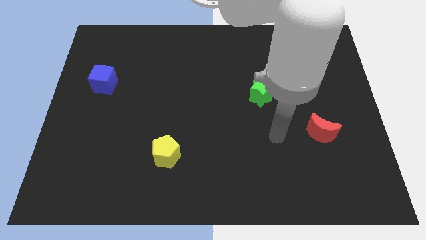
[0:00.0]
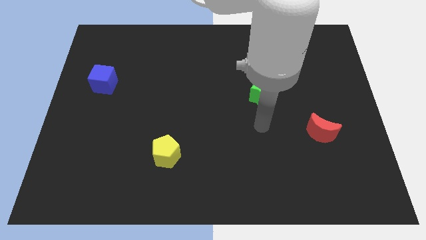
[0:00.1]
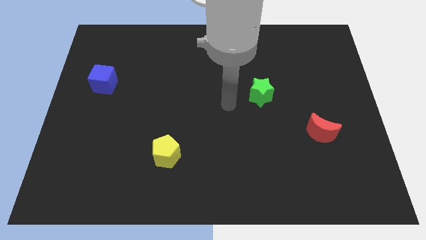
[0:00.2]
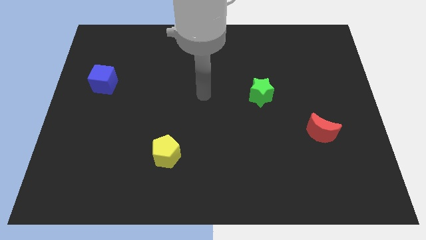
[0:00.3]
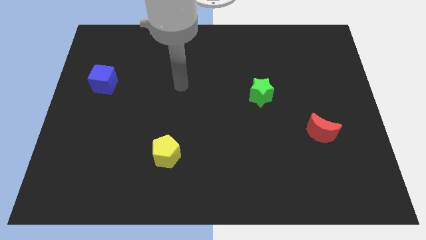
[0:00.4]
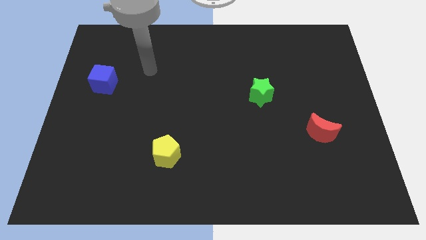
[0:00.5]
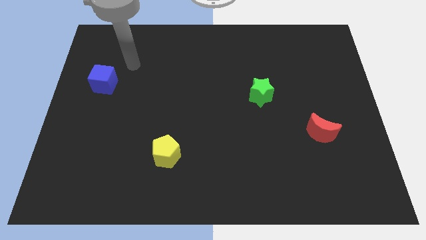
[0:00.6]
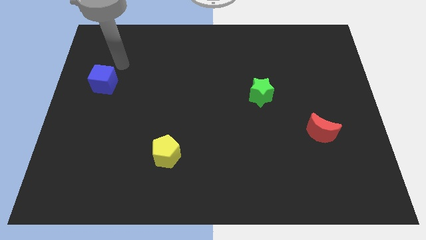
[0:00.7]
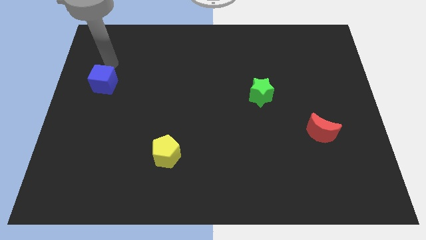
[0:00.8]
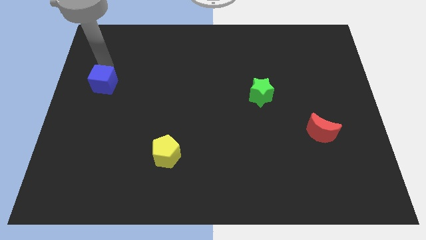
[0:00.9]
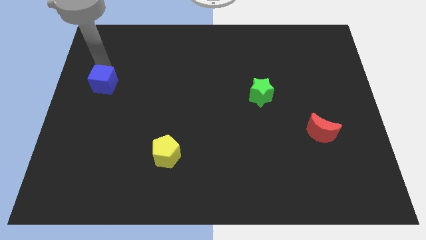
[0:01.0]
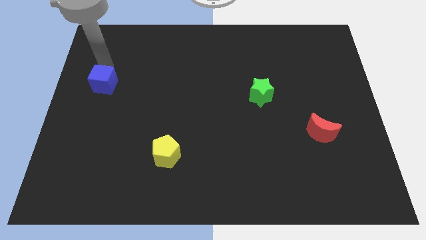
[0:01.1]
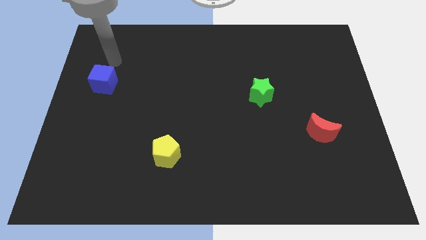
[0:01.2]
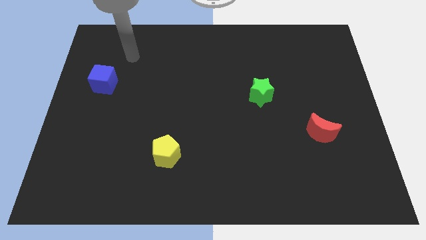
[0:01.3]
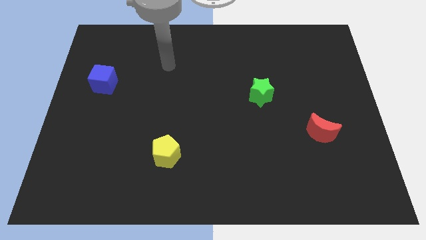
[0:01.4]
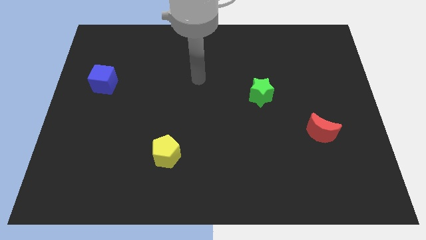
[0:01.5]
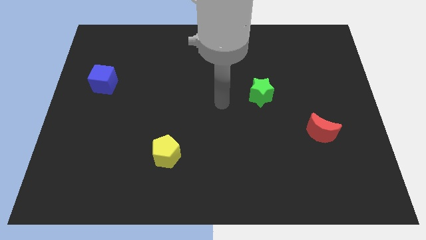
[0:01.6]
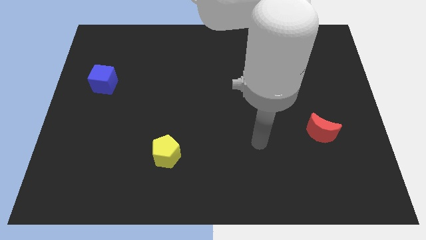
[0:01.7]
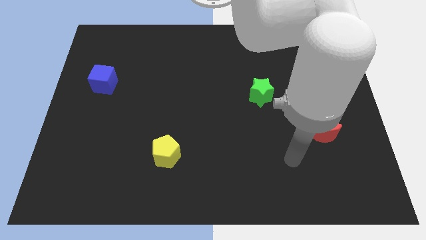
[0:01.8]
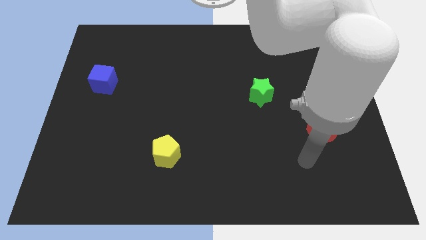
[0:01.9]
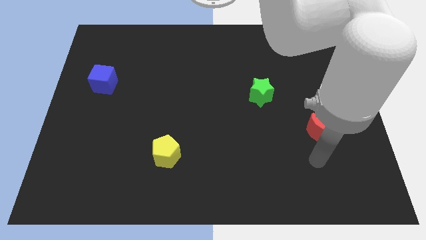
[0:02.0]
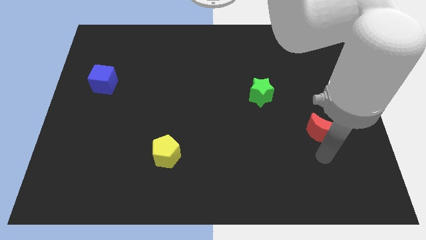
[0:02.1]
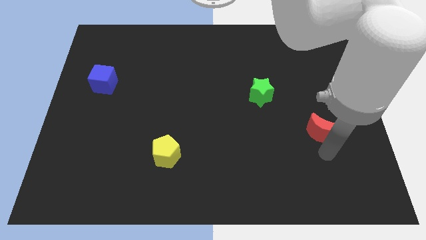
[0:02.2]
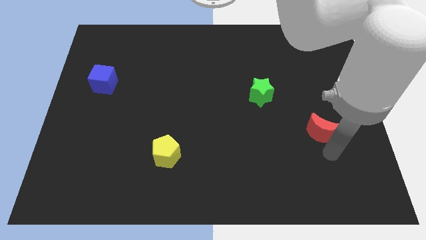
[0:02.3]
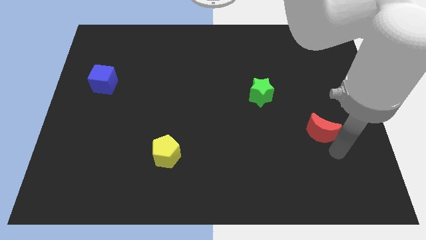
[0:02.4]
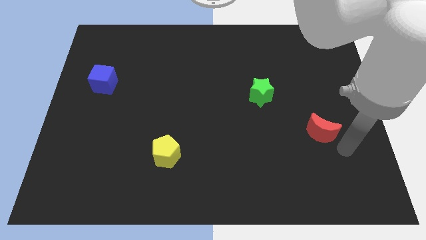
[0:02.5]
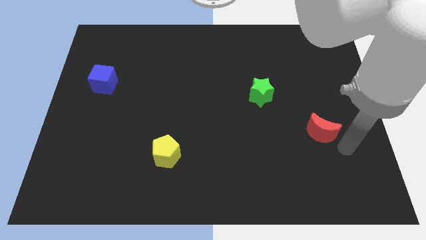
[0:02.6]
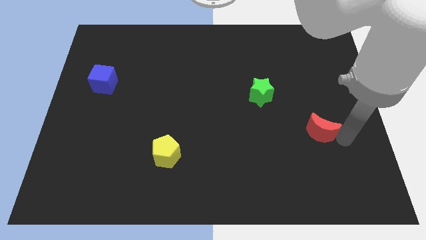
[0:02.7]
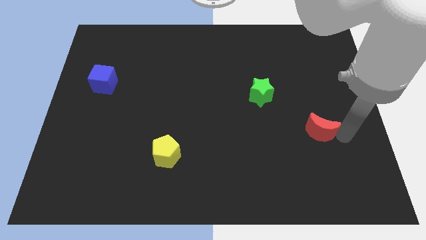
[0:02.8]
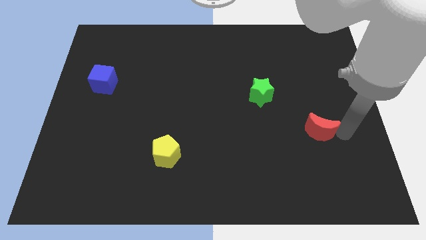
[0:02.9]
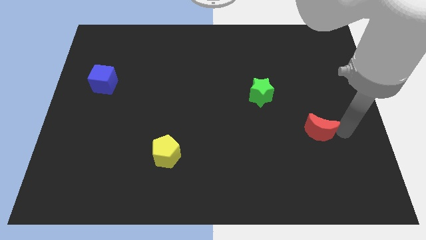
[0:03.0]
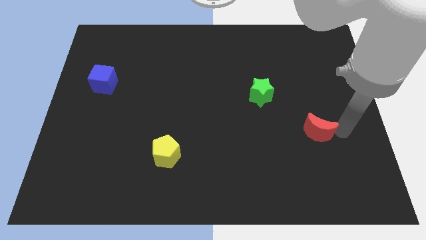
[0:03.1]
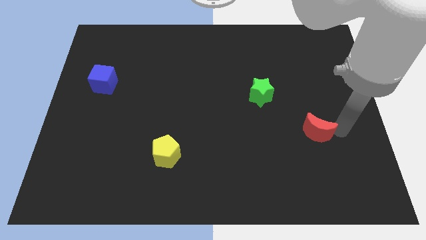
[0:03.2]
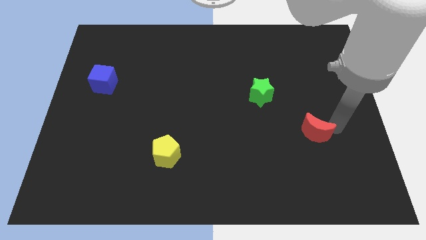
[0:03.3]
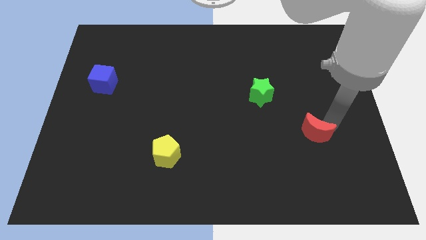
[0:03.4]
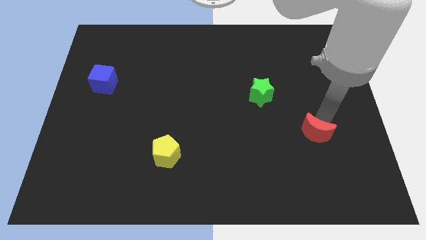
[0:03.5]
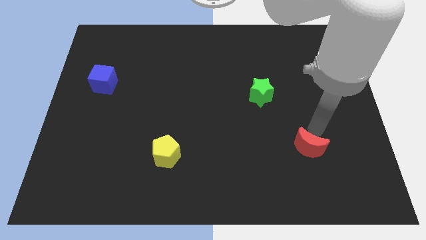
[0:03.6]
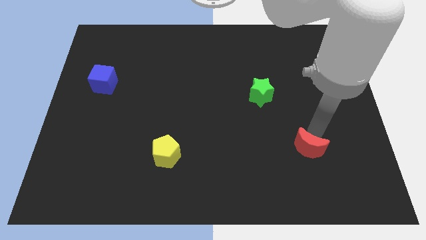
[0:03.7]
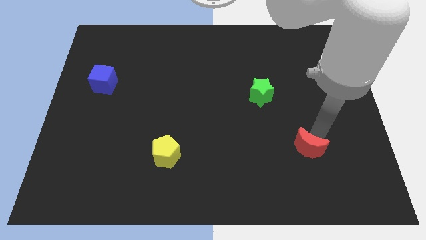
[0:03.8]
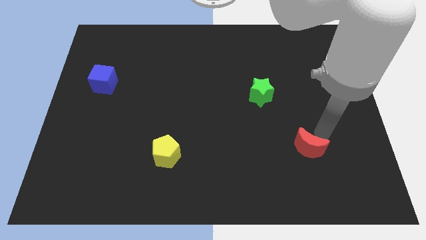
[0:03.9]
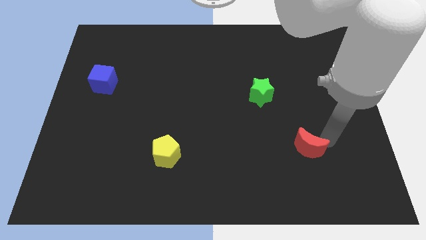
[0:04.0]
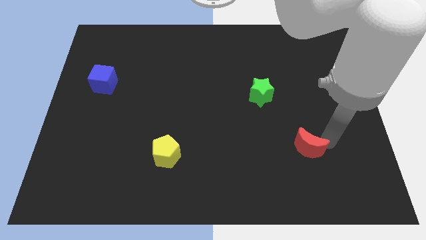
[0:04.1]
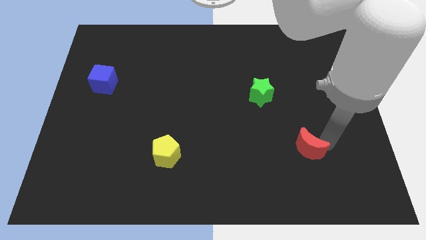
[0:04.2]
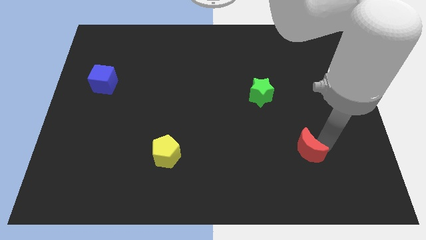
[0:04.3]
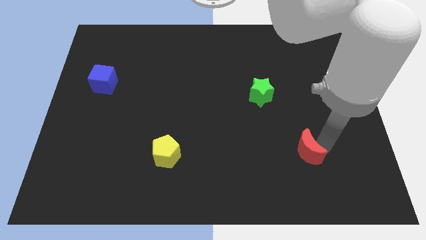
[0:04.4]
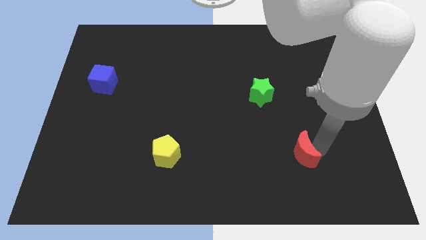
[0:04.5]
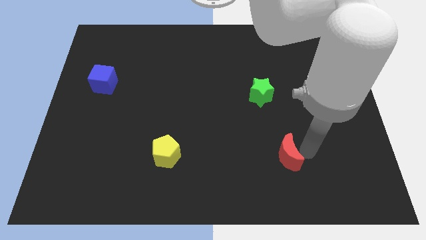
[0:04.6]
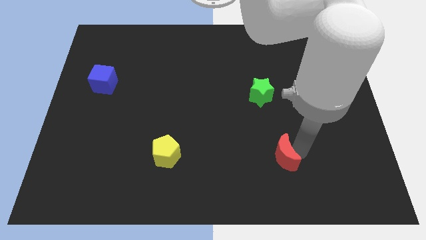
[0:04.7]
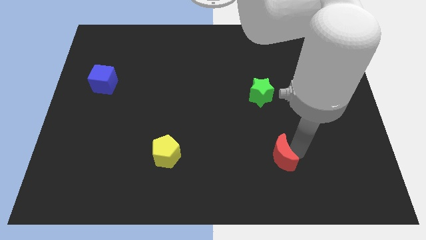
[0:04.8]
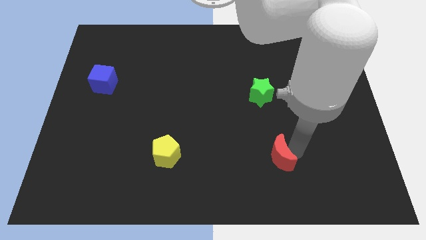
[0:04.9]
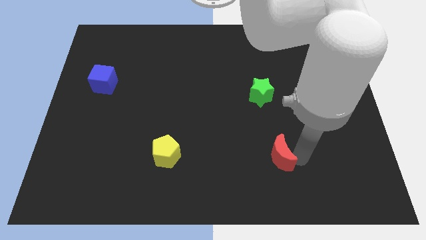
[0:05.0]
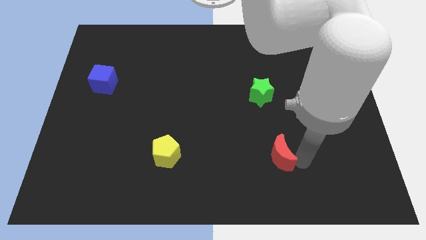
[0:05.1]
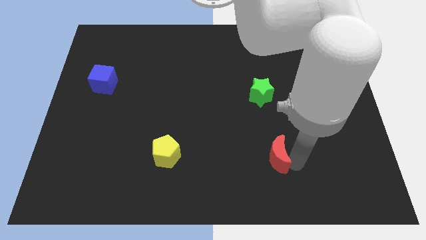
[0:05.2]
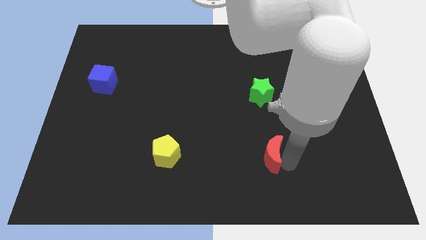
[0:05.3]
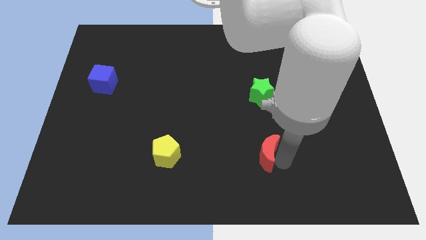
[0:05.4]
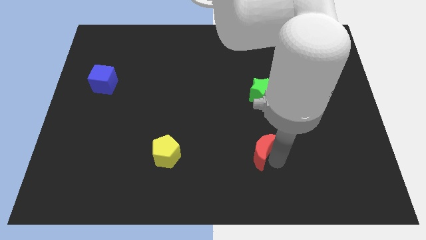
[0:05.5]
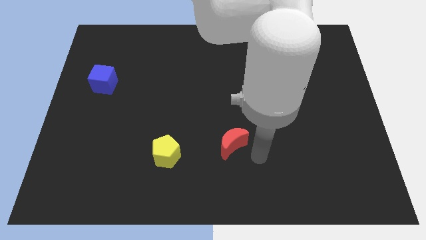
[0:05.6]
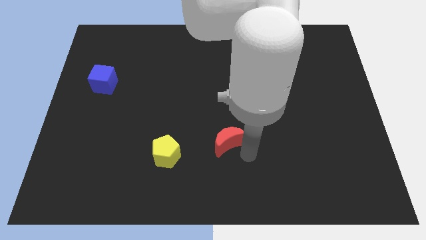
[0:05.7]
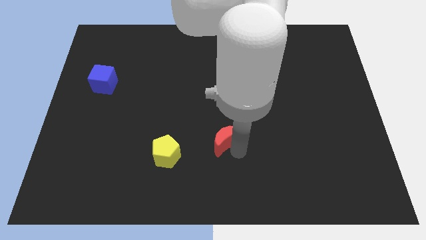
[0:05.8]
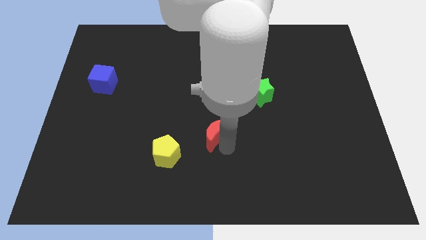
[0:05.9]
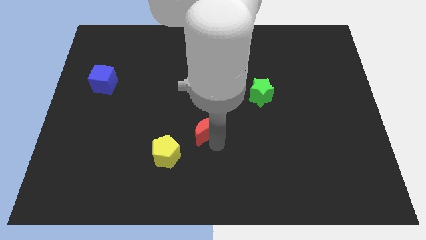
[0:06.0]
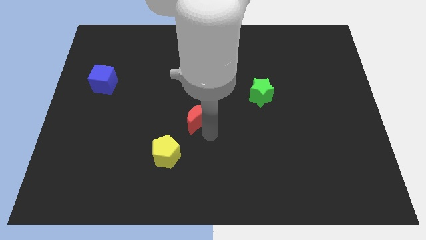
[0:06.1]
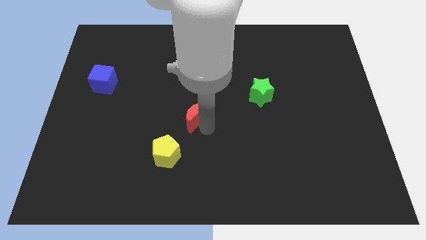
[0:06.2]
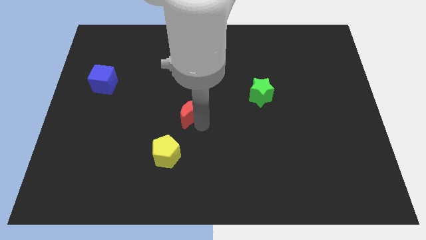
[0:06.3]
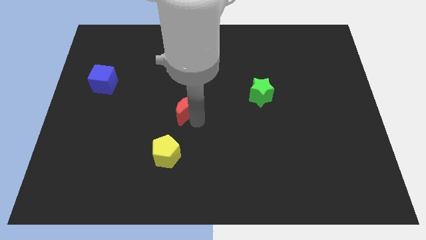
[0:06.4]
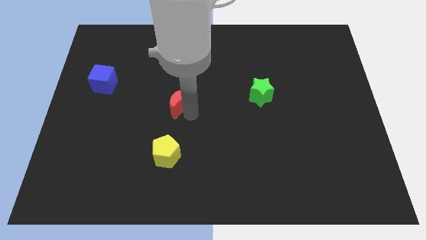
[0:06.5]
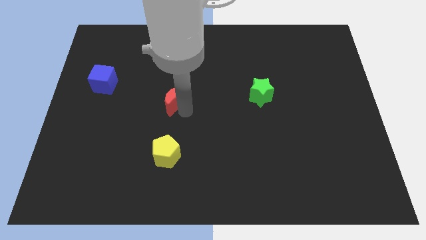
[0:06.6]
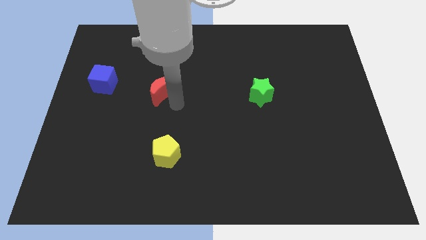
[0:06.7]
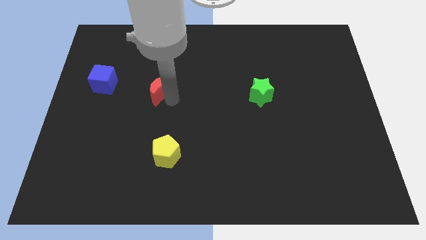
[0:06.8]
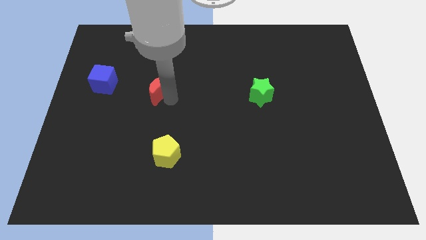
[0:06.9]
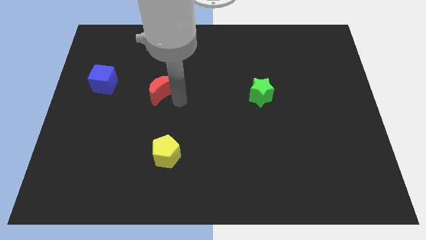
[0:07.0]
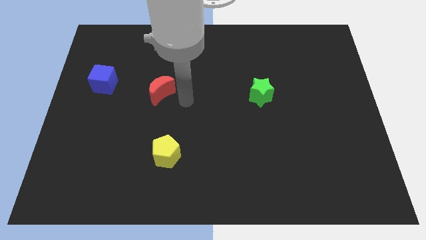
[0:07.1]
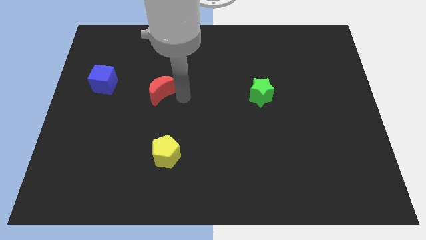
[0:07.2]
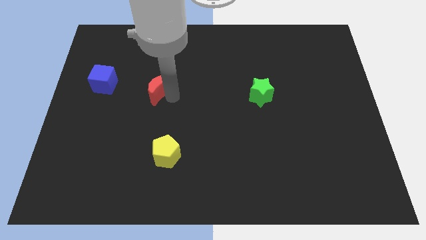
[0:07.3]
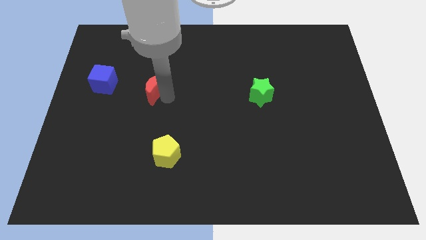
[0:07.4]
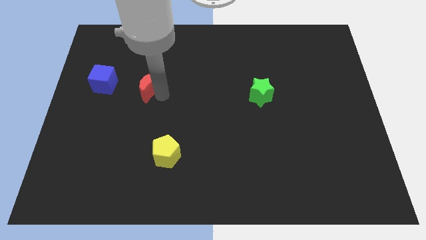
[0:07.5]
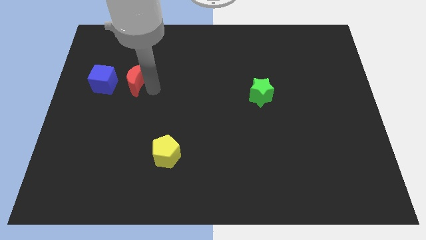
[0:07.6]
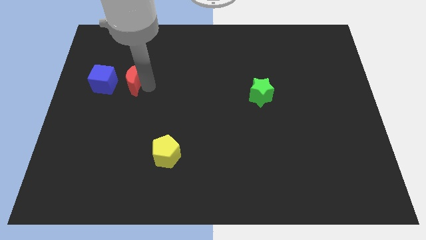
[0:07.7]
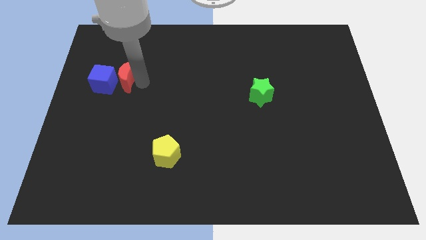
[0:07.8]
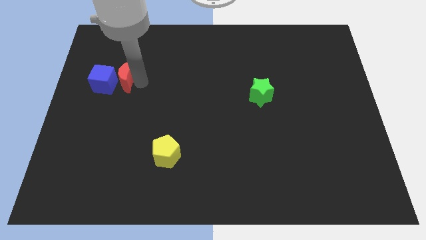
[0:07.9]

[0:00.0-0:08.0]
move the red moon next to the cube

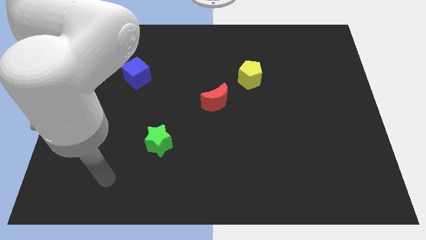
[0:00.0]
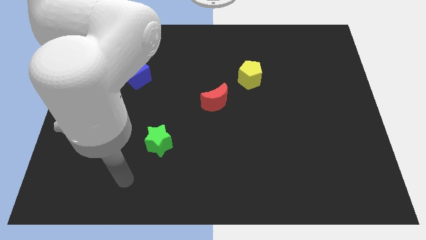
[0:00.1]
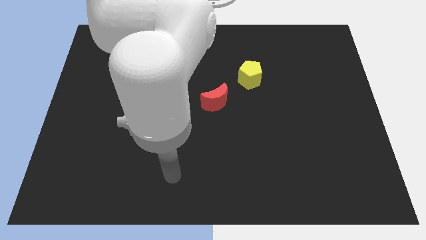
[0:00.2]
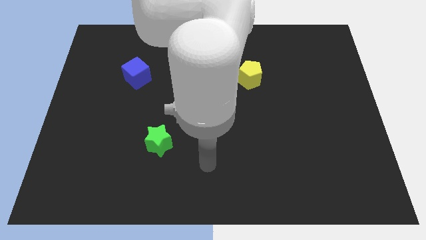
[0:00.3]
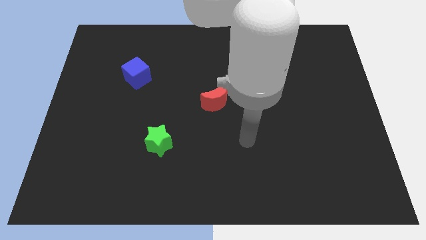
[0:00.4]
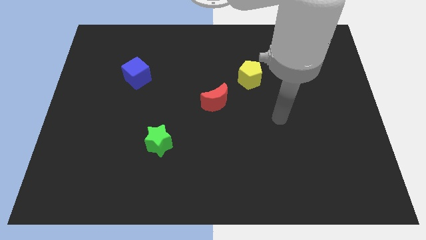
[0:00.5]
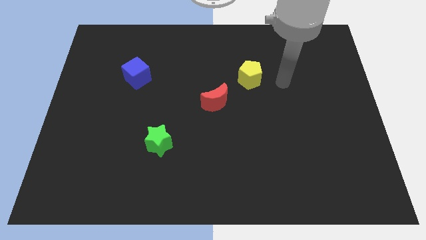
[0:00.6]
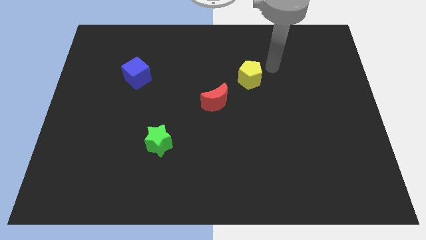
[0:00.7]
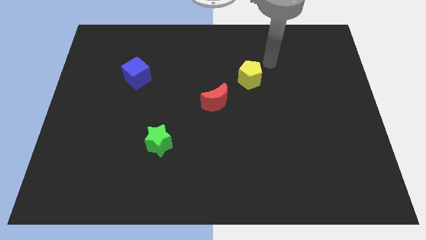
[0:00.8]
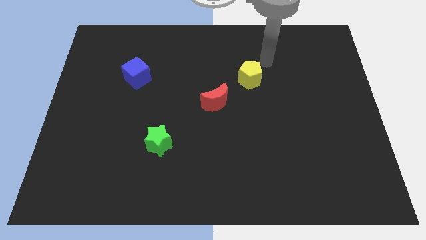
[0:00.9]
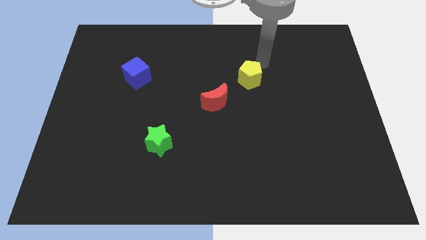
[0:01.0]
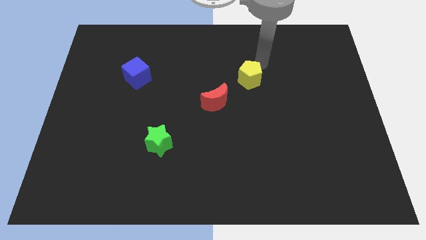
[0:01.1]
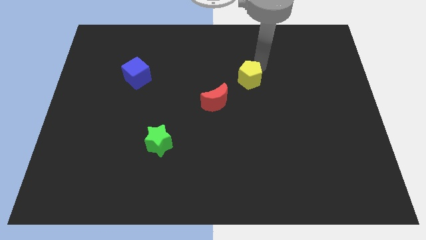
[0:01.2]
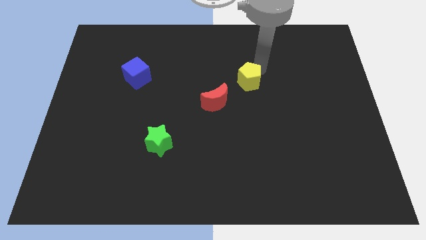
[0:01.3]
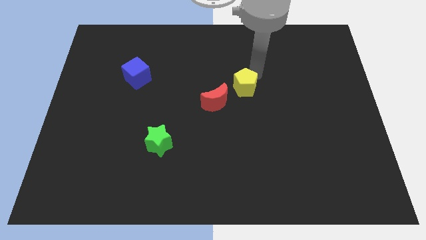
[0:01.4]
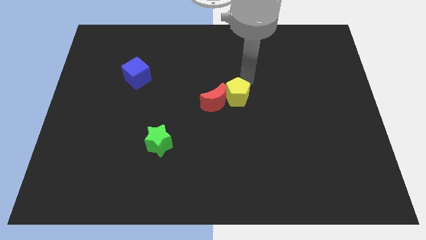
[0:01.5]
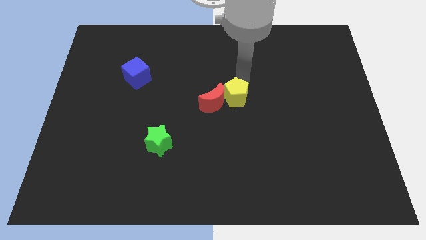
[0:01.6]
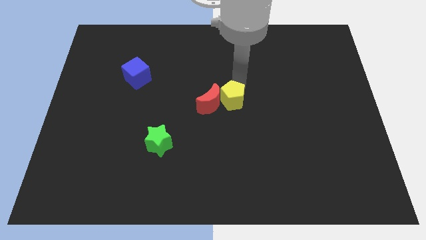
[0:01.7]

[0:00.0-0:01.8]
slide the yellow pentagon close to the red block
